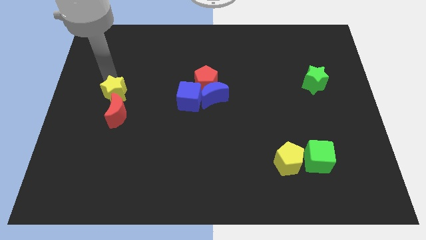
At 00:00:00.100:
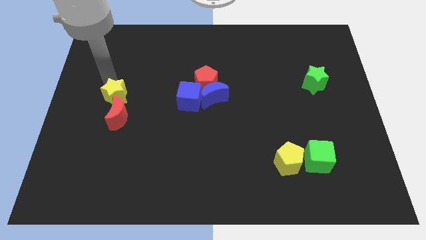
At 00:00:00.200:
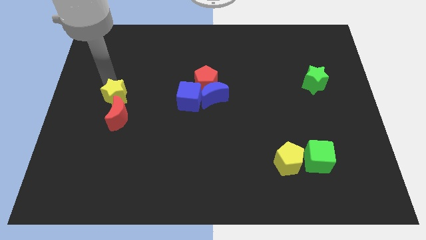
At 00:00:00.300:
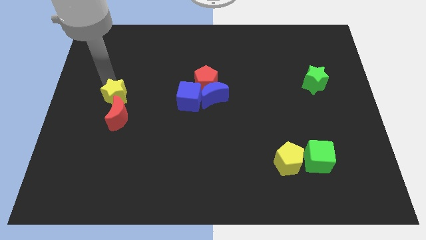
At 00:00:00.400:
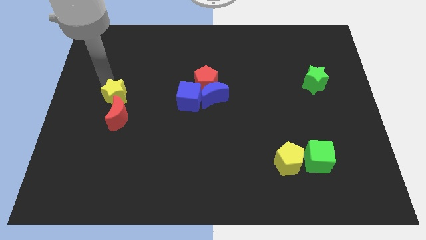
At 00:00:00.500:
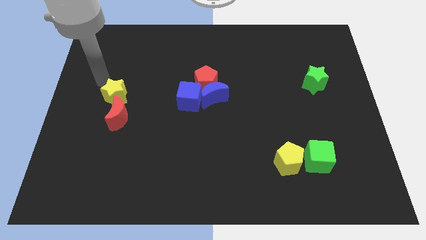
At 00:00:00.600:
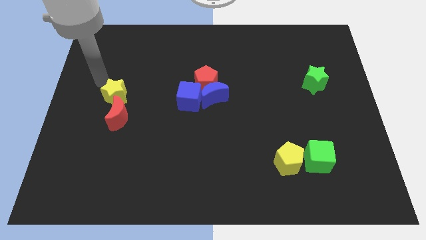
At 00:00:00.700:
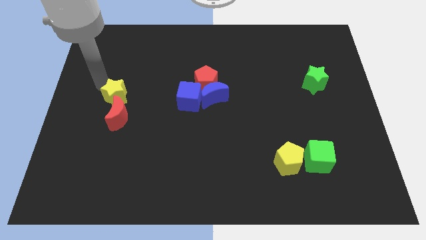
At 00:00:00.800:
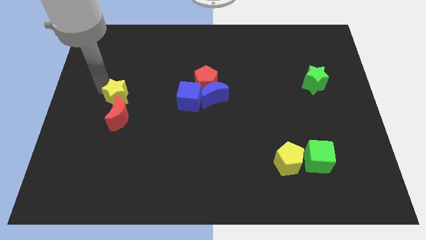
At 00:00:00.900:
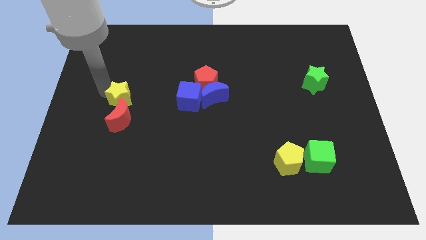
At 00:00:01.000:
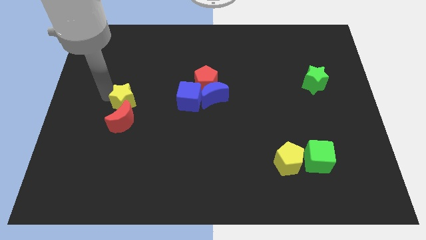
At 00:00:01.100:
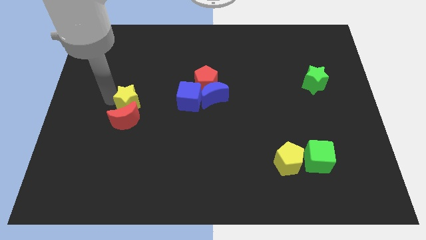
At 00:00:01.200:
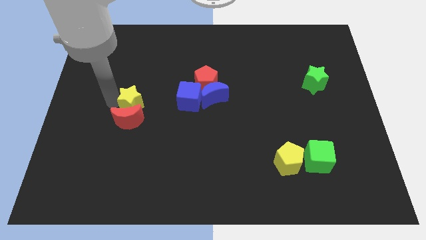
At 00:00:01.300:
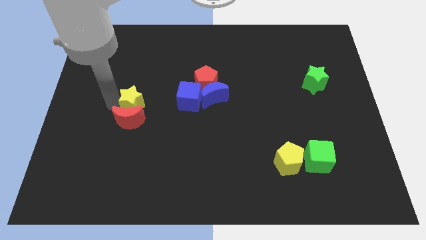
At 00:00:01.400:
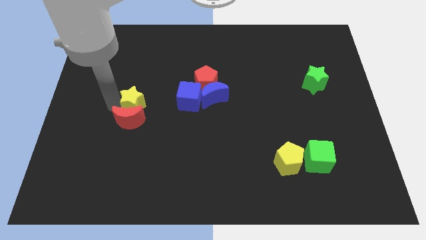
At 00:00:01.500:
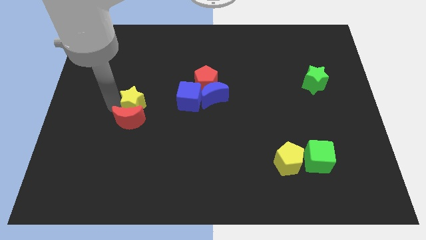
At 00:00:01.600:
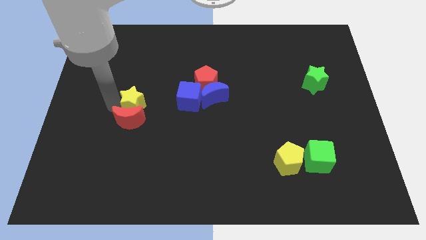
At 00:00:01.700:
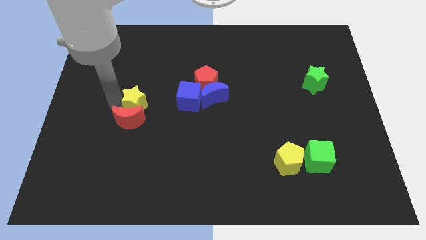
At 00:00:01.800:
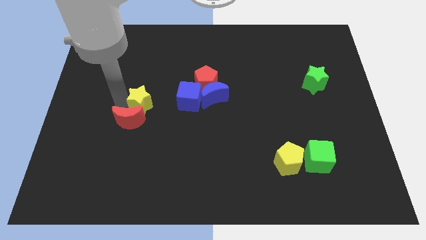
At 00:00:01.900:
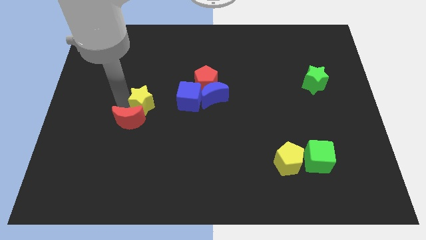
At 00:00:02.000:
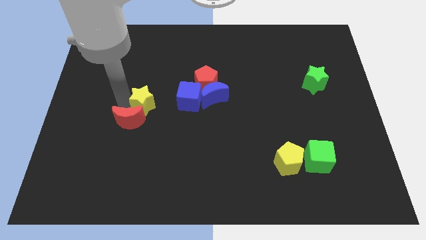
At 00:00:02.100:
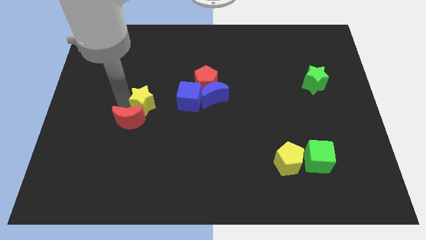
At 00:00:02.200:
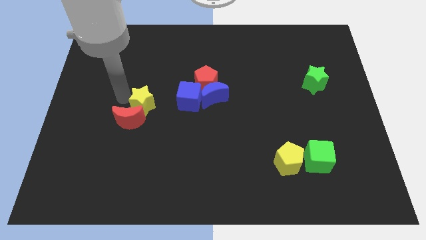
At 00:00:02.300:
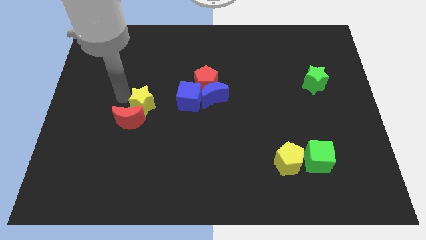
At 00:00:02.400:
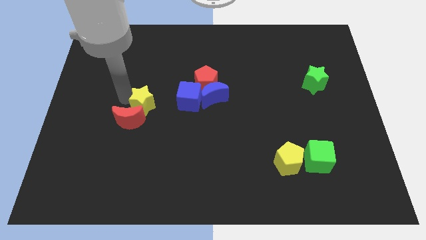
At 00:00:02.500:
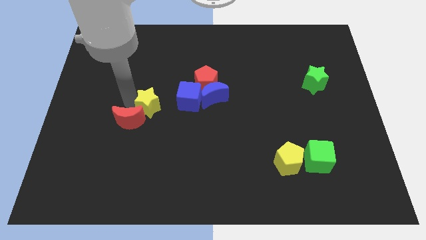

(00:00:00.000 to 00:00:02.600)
push the yellow star towards the center of the board

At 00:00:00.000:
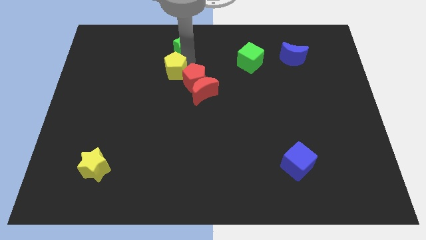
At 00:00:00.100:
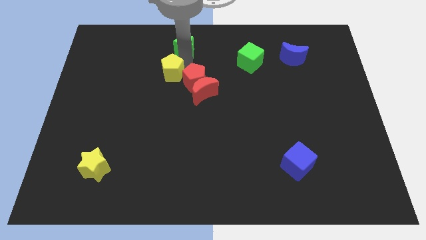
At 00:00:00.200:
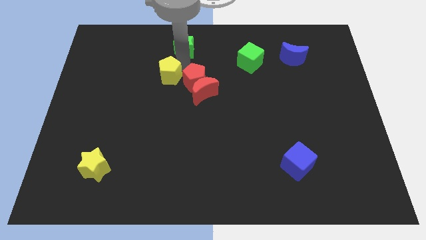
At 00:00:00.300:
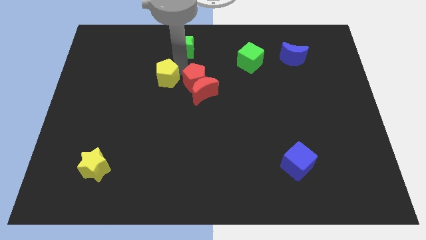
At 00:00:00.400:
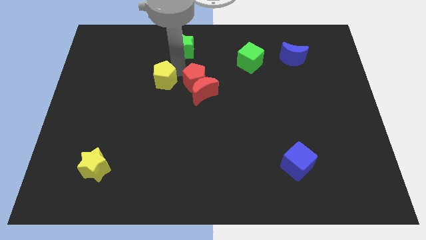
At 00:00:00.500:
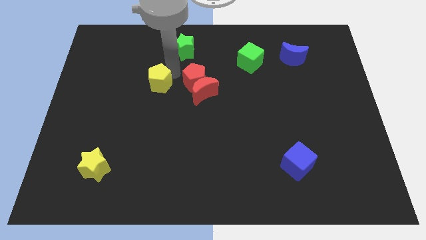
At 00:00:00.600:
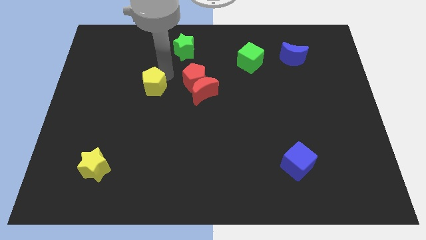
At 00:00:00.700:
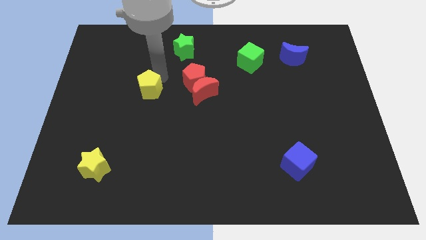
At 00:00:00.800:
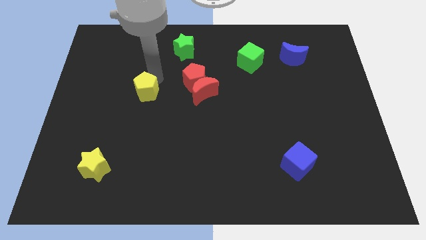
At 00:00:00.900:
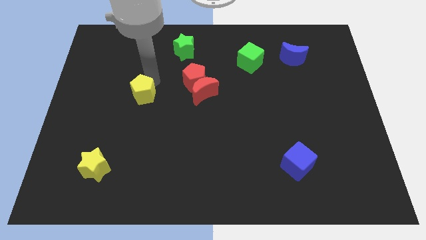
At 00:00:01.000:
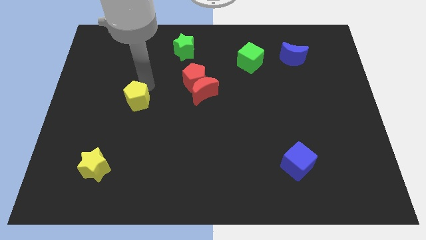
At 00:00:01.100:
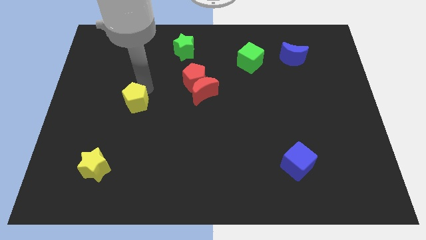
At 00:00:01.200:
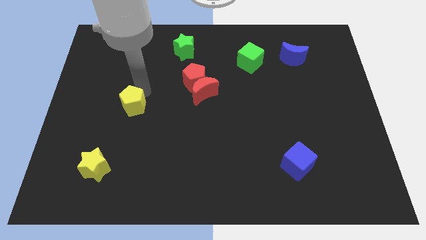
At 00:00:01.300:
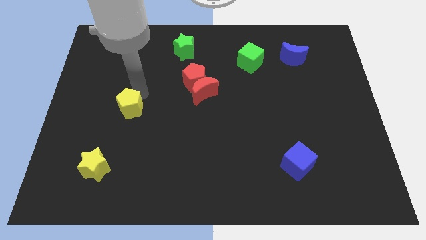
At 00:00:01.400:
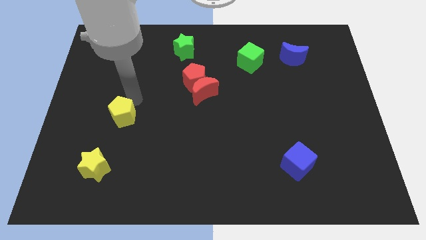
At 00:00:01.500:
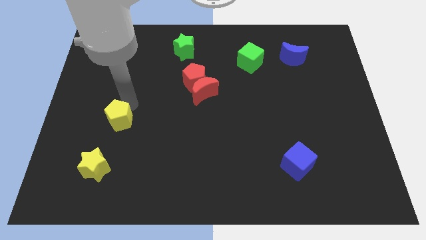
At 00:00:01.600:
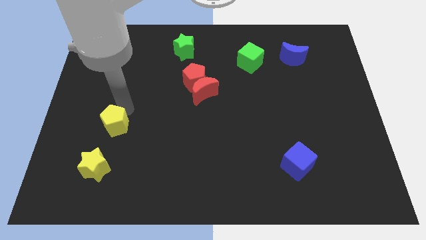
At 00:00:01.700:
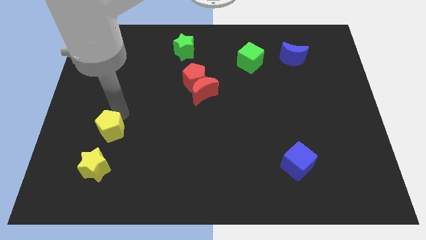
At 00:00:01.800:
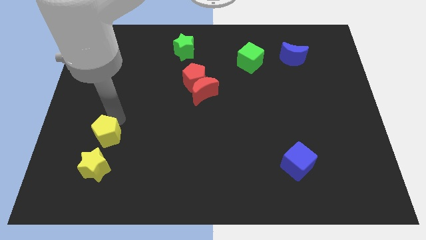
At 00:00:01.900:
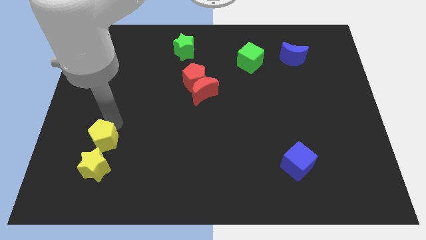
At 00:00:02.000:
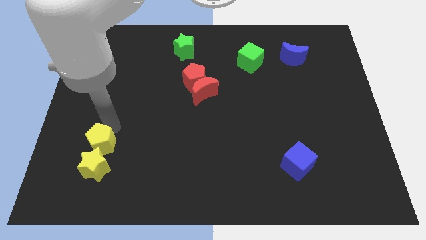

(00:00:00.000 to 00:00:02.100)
push the yellow pentagon on top of the yellow star

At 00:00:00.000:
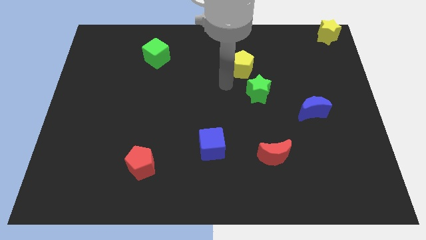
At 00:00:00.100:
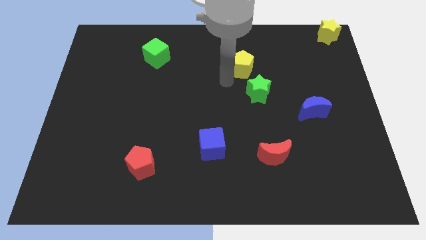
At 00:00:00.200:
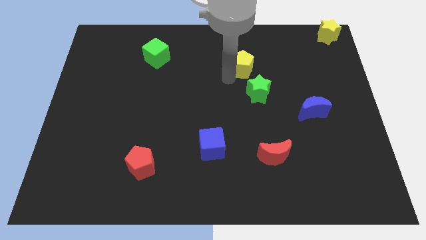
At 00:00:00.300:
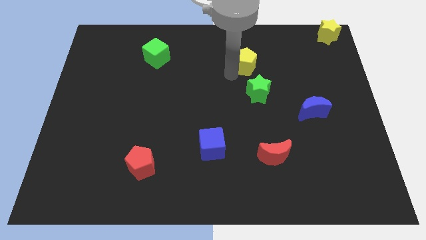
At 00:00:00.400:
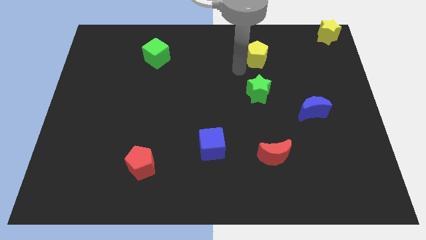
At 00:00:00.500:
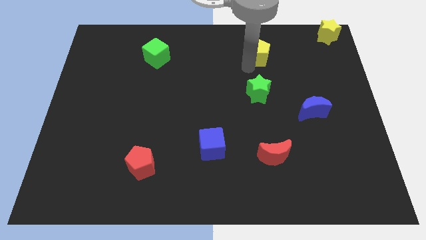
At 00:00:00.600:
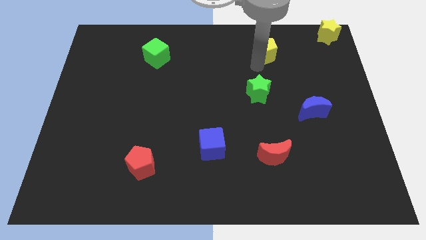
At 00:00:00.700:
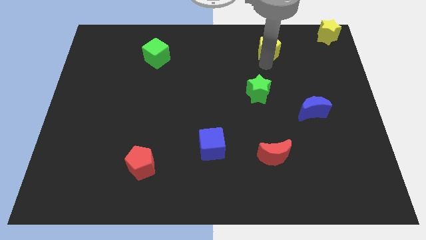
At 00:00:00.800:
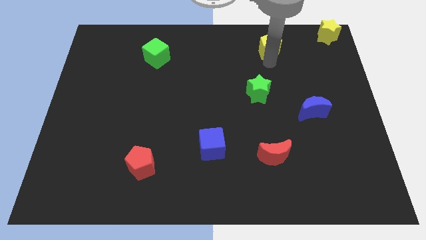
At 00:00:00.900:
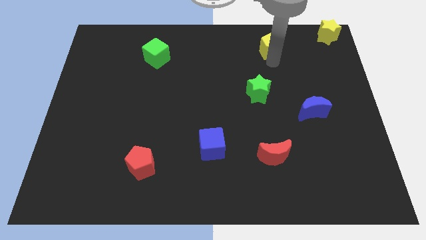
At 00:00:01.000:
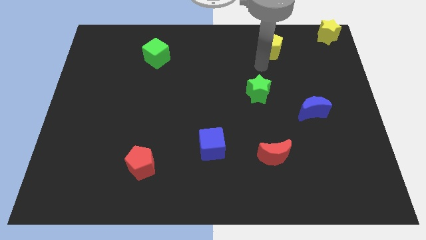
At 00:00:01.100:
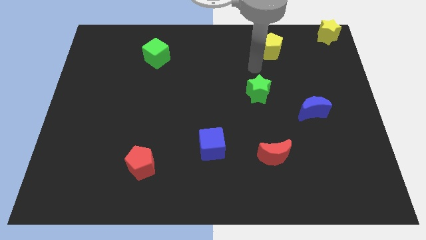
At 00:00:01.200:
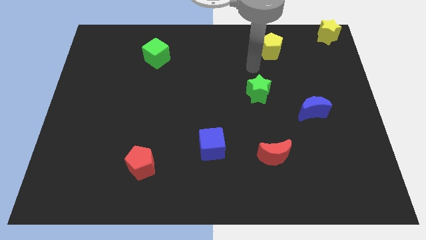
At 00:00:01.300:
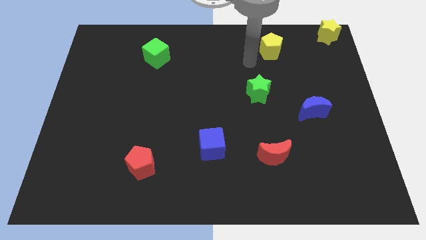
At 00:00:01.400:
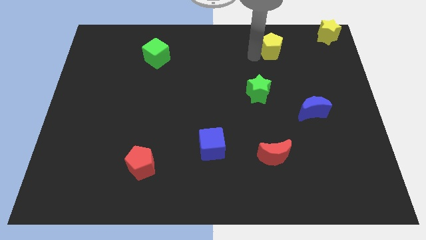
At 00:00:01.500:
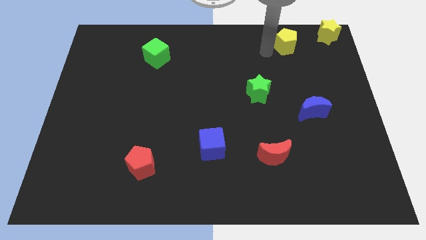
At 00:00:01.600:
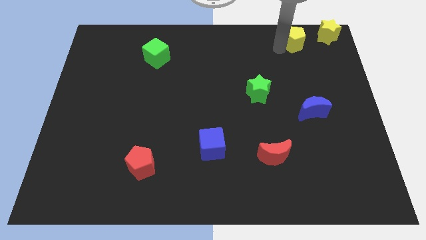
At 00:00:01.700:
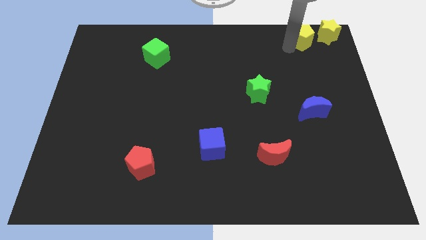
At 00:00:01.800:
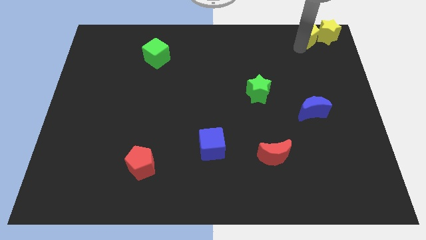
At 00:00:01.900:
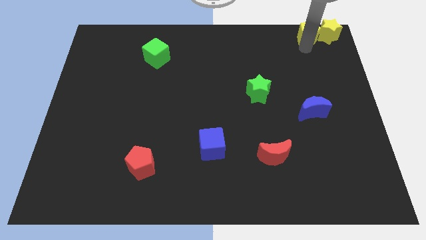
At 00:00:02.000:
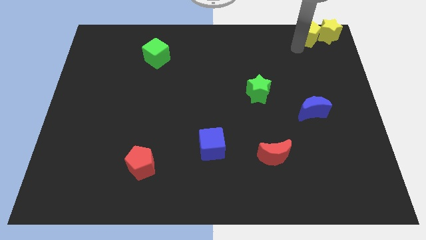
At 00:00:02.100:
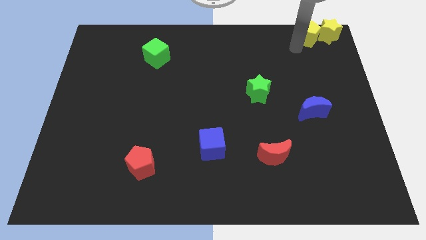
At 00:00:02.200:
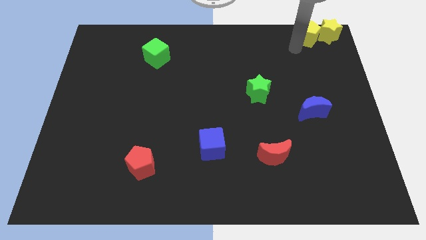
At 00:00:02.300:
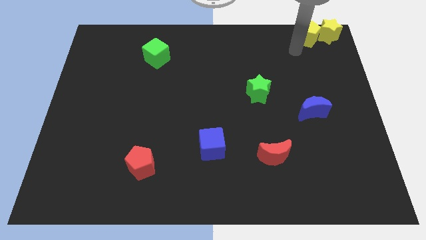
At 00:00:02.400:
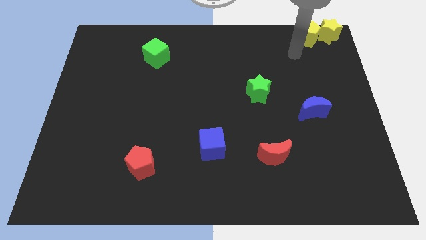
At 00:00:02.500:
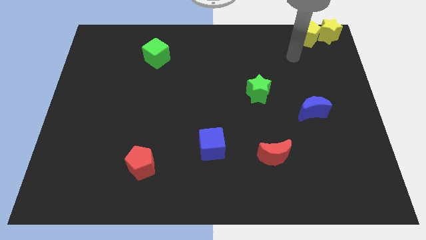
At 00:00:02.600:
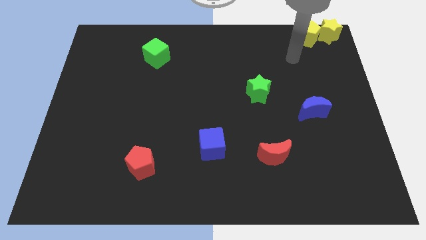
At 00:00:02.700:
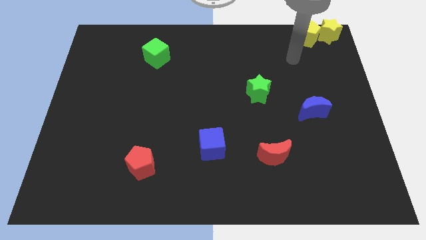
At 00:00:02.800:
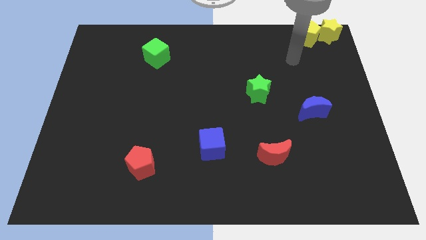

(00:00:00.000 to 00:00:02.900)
drag the yellow pentagon to top right

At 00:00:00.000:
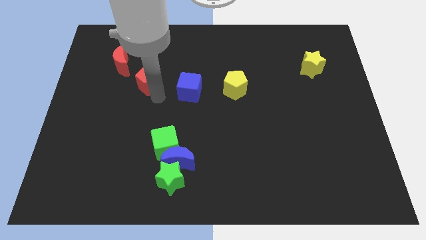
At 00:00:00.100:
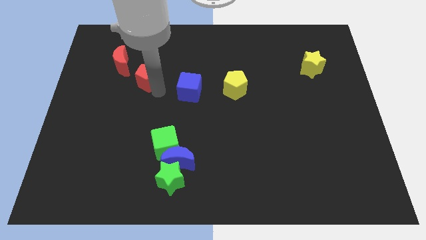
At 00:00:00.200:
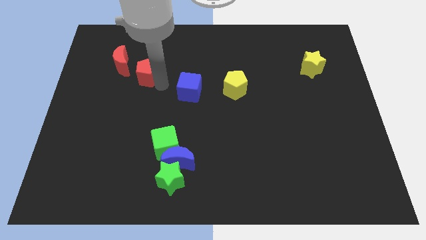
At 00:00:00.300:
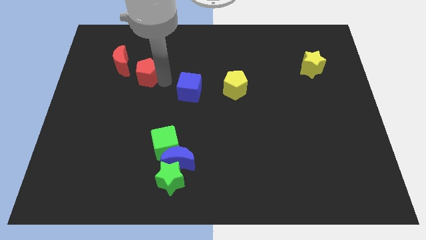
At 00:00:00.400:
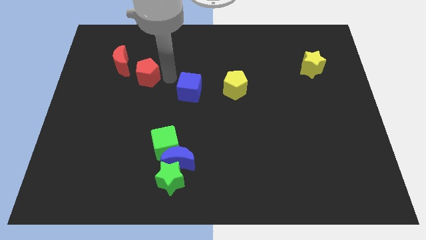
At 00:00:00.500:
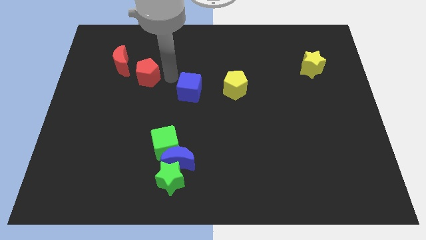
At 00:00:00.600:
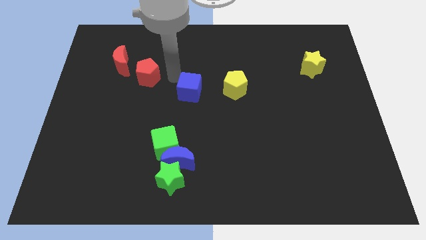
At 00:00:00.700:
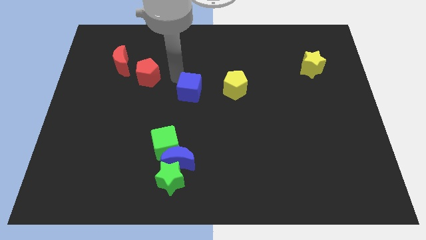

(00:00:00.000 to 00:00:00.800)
move red pentagon slightly up

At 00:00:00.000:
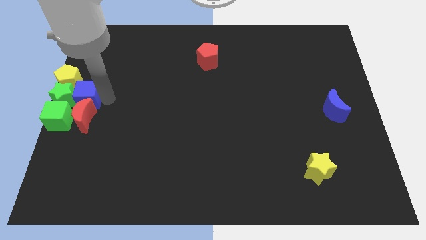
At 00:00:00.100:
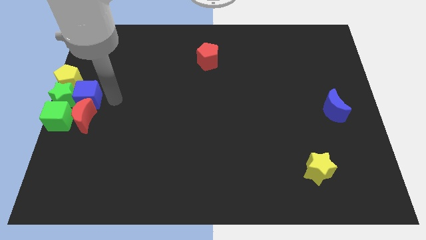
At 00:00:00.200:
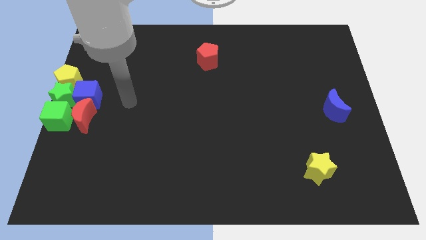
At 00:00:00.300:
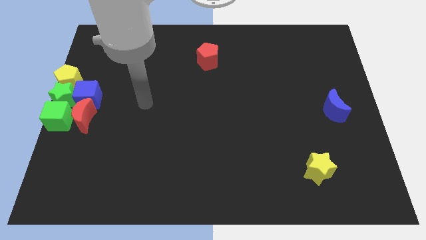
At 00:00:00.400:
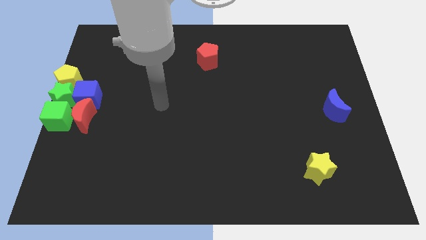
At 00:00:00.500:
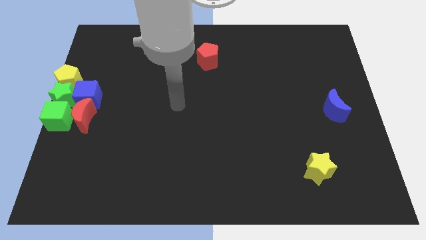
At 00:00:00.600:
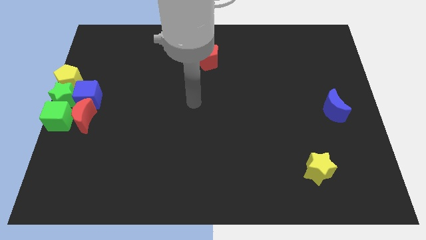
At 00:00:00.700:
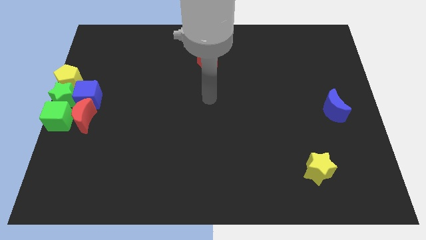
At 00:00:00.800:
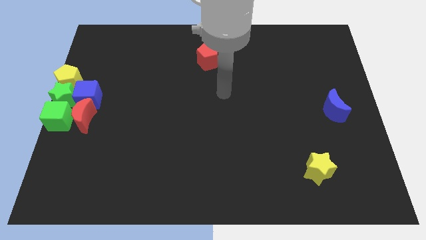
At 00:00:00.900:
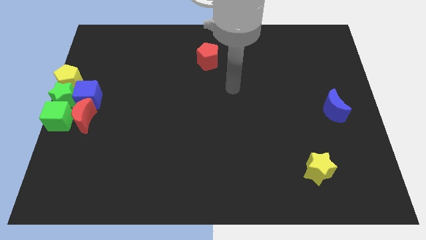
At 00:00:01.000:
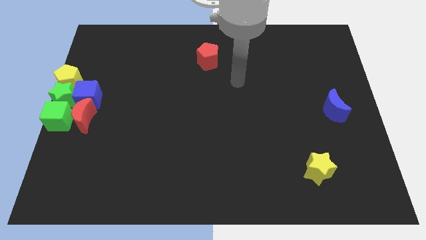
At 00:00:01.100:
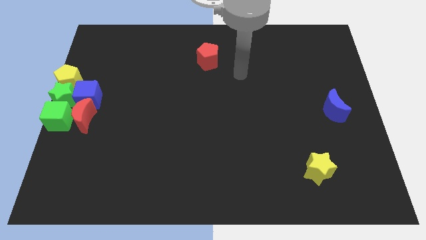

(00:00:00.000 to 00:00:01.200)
push blue cube into the green star
